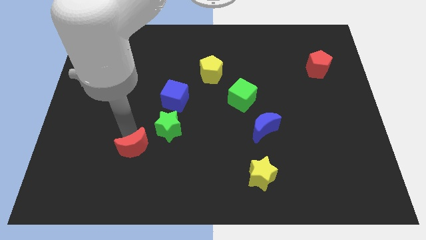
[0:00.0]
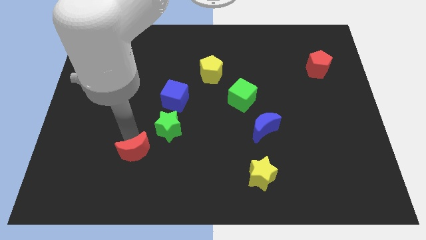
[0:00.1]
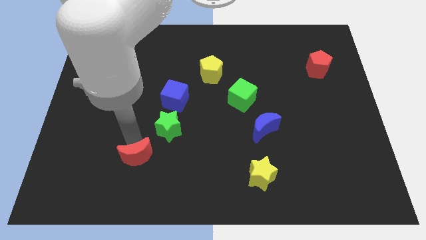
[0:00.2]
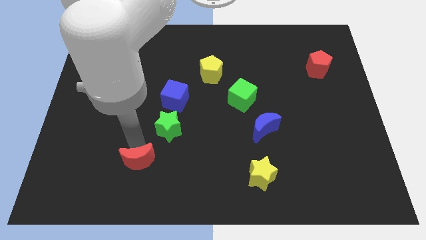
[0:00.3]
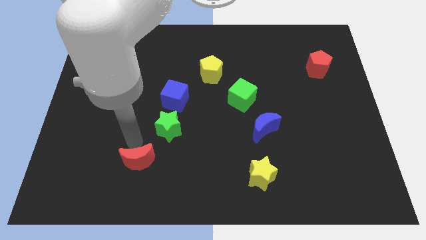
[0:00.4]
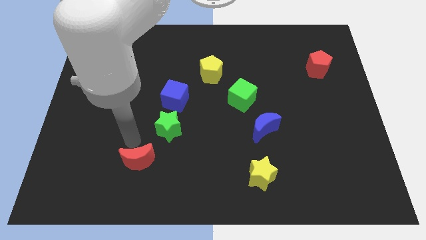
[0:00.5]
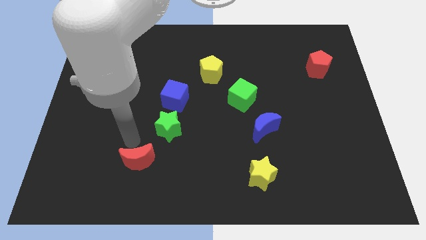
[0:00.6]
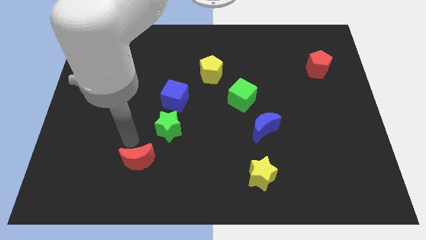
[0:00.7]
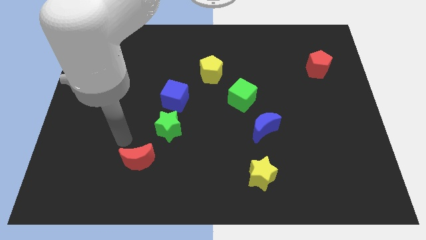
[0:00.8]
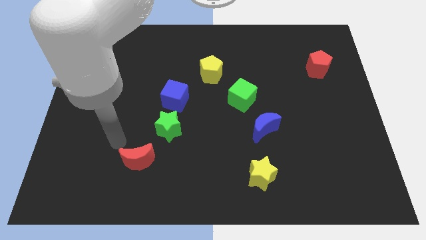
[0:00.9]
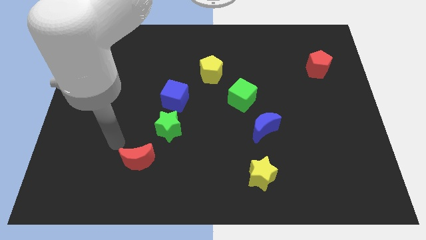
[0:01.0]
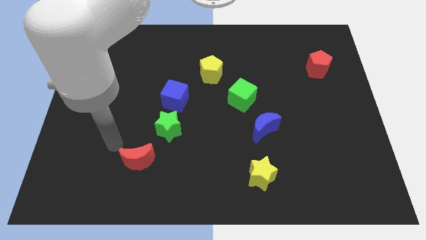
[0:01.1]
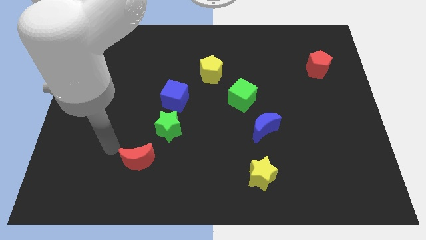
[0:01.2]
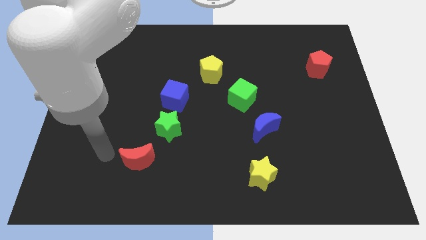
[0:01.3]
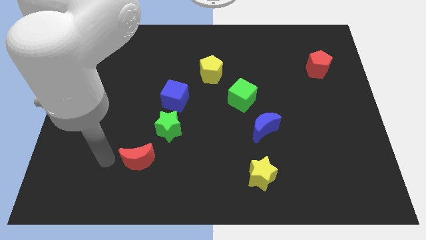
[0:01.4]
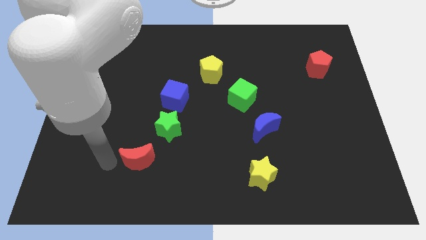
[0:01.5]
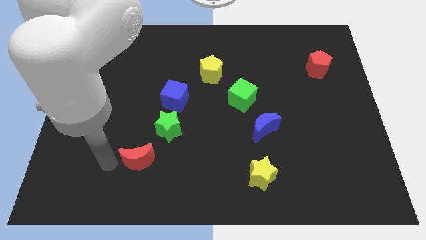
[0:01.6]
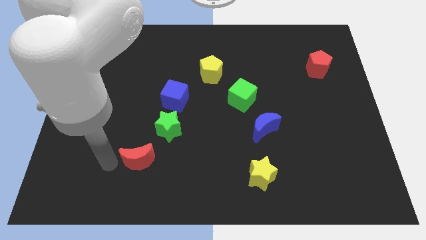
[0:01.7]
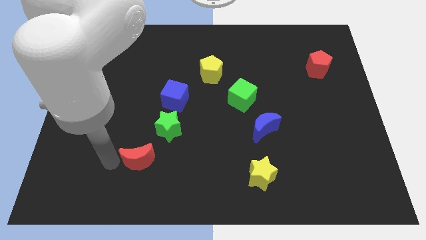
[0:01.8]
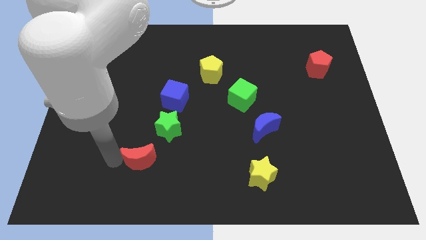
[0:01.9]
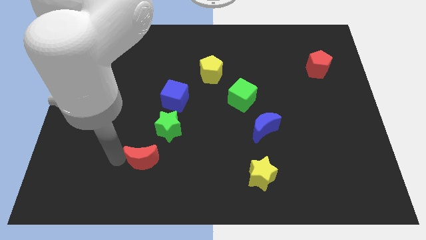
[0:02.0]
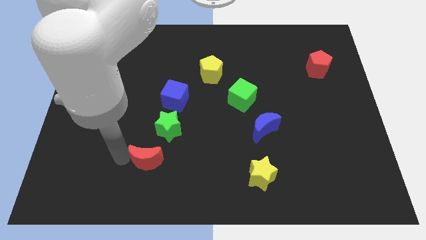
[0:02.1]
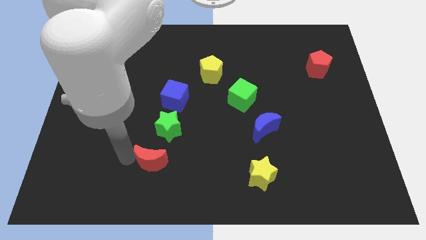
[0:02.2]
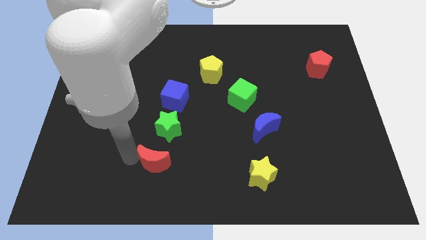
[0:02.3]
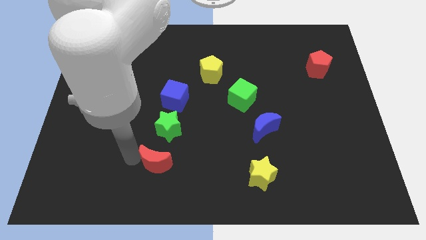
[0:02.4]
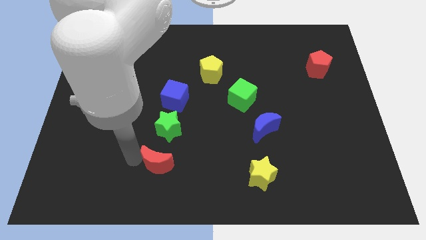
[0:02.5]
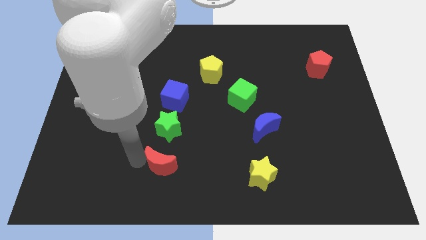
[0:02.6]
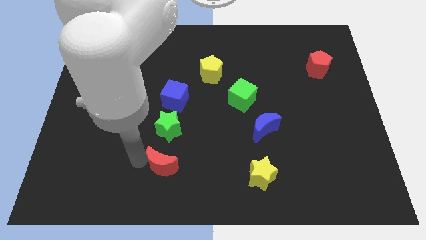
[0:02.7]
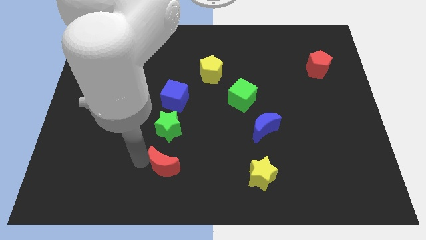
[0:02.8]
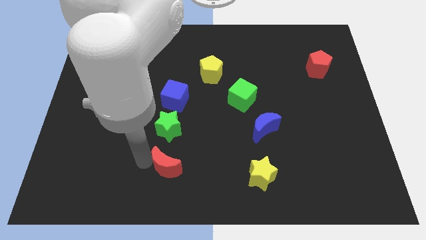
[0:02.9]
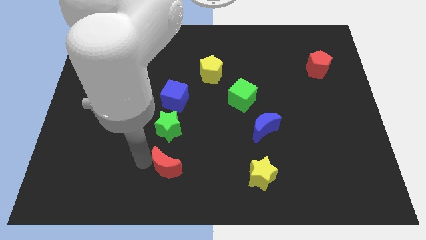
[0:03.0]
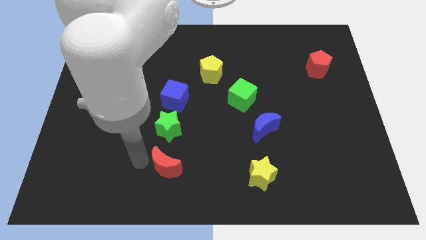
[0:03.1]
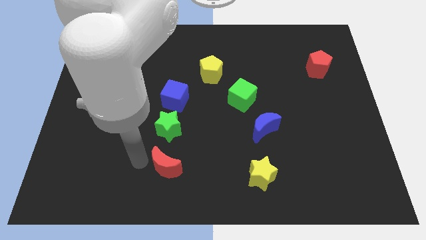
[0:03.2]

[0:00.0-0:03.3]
place the red moon at the bottom of green star

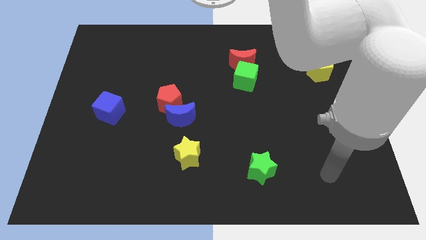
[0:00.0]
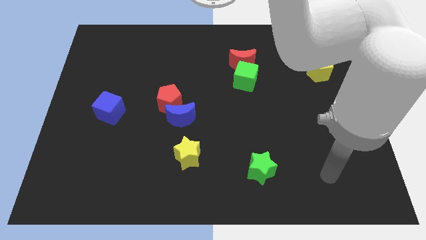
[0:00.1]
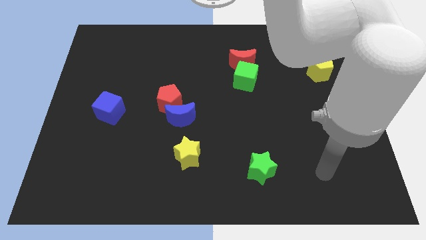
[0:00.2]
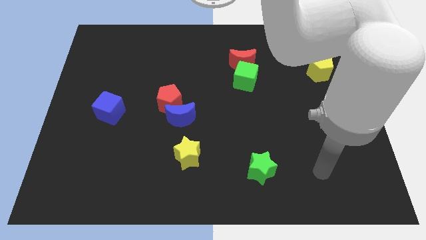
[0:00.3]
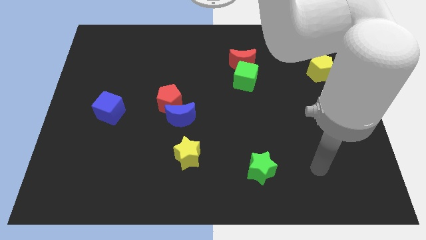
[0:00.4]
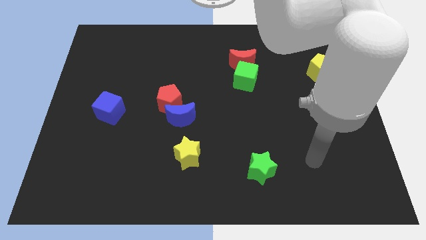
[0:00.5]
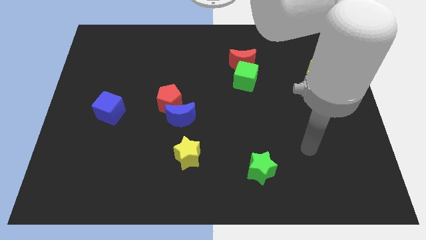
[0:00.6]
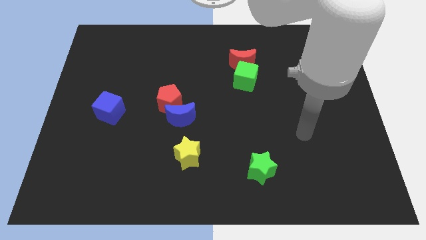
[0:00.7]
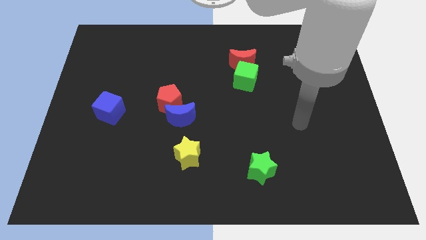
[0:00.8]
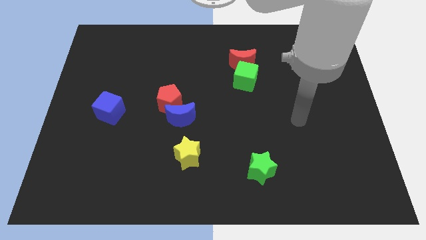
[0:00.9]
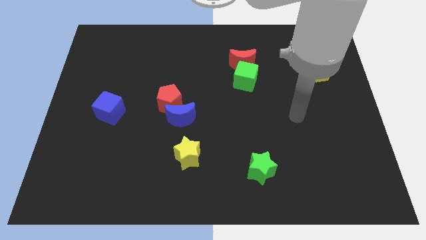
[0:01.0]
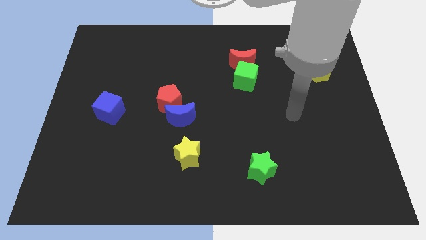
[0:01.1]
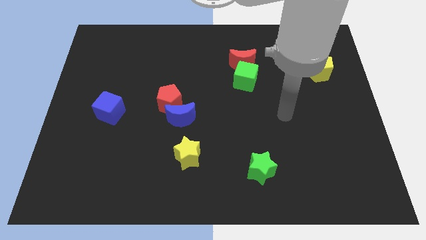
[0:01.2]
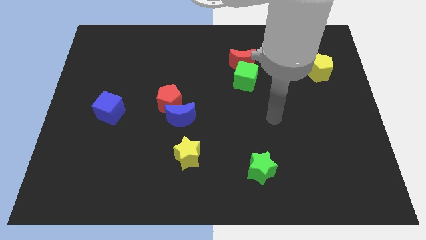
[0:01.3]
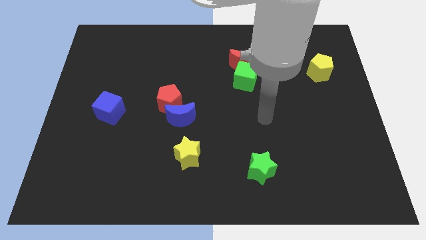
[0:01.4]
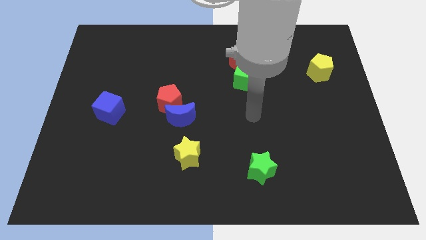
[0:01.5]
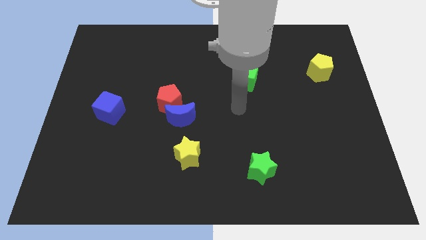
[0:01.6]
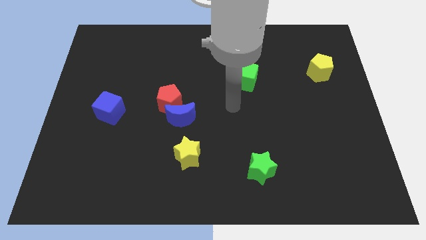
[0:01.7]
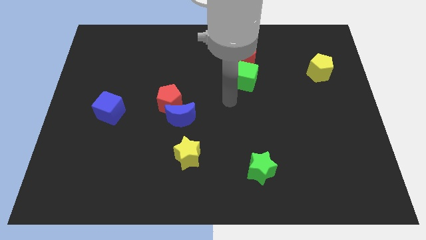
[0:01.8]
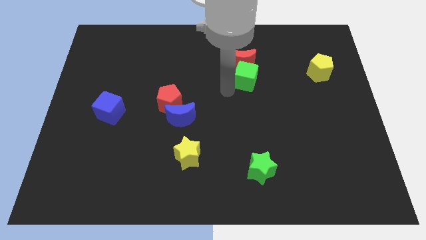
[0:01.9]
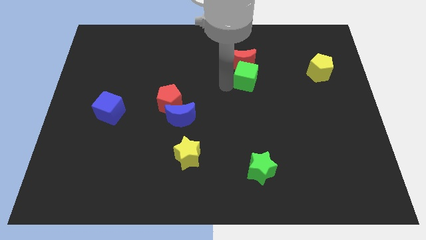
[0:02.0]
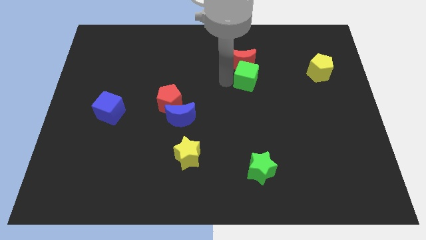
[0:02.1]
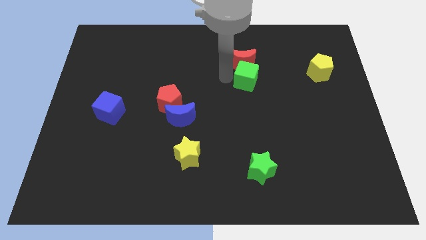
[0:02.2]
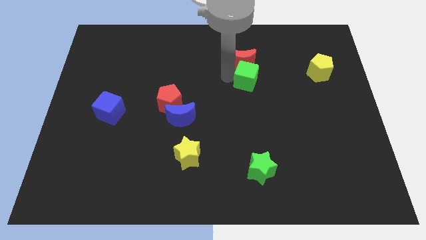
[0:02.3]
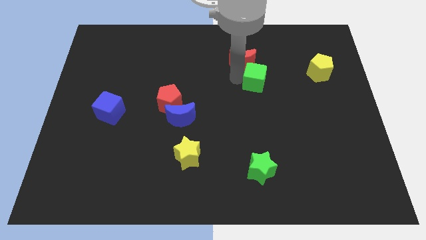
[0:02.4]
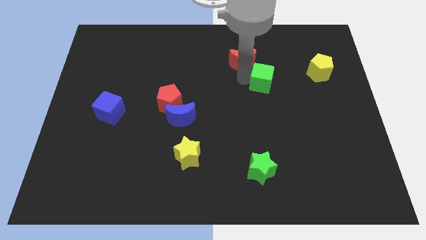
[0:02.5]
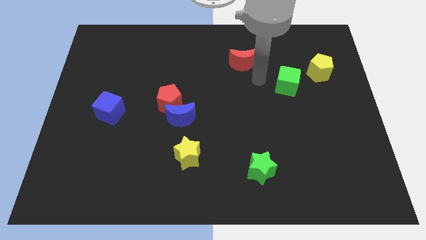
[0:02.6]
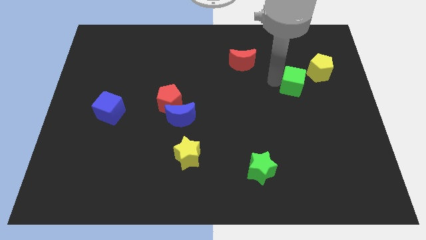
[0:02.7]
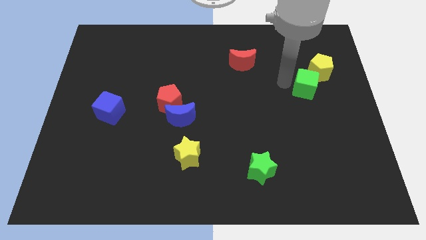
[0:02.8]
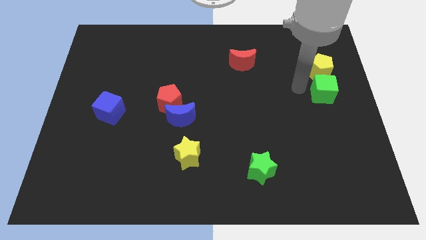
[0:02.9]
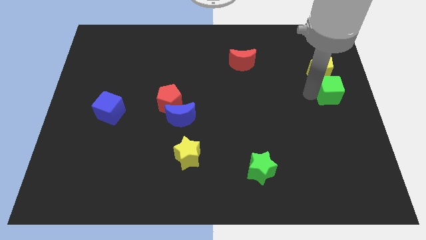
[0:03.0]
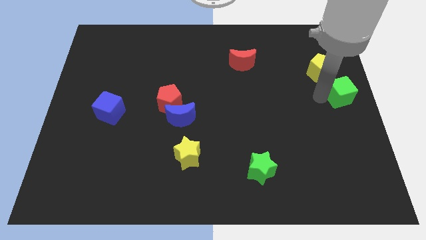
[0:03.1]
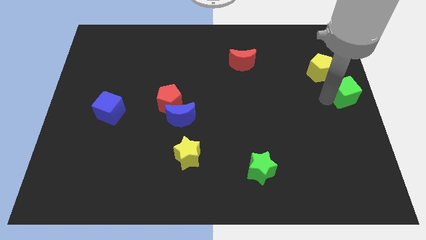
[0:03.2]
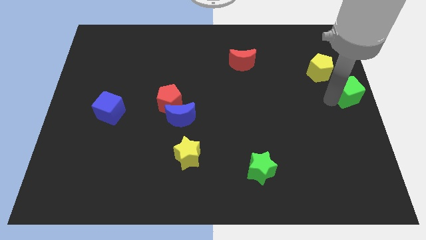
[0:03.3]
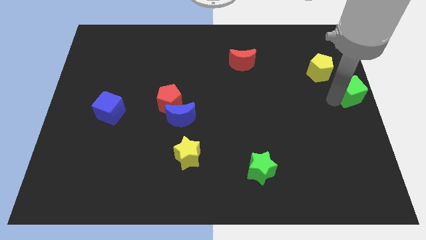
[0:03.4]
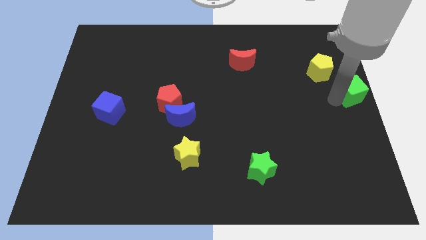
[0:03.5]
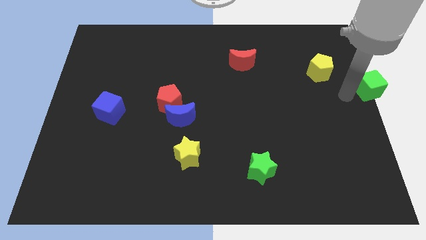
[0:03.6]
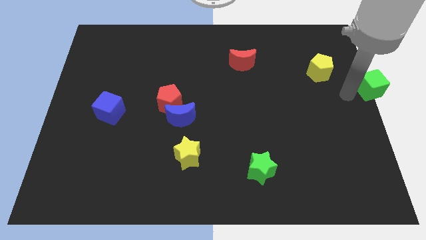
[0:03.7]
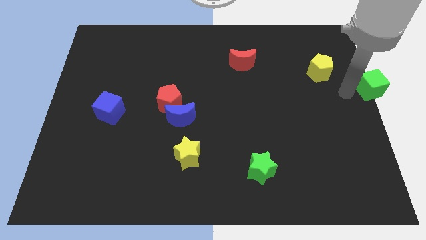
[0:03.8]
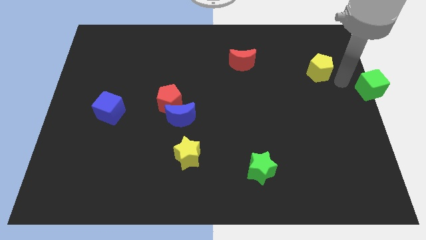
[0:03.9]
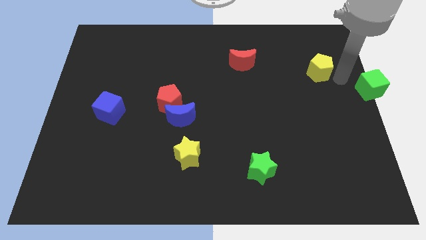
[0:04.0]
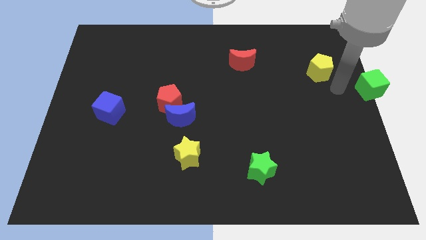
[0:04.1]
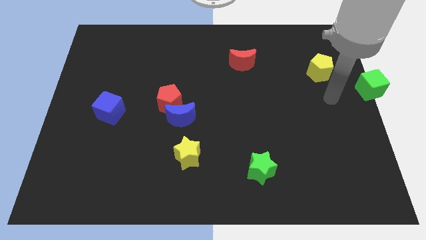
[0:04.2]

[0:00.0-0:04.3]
push the green cube to the center right side of the board

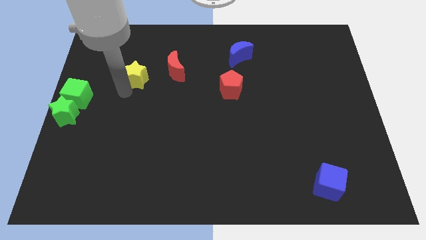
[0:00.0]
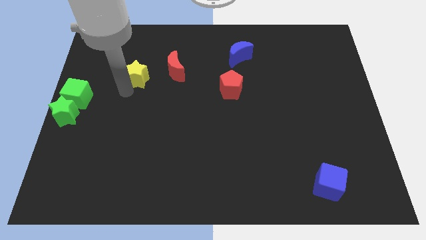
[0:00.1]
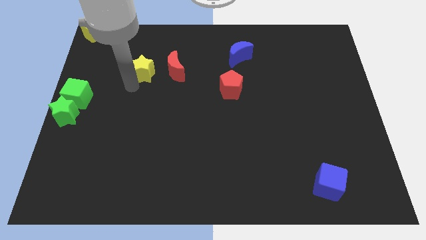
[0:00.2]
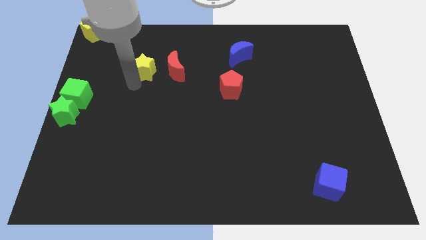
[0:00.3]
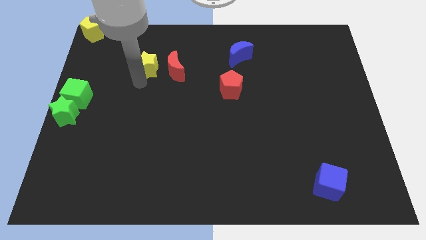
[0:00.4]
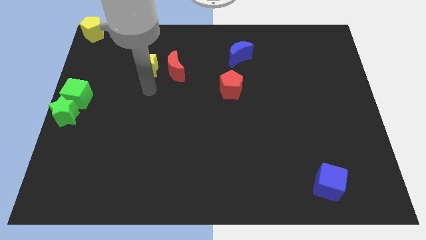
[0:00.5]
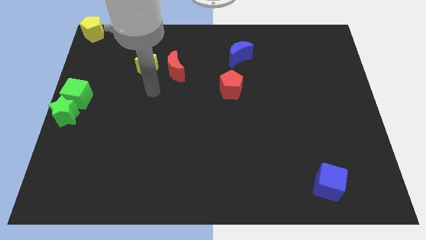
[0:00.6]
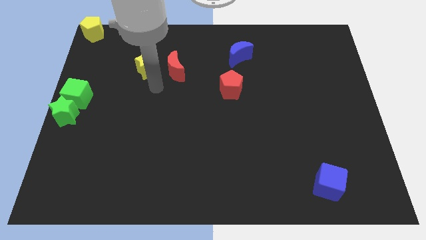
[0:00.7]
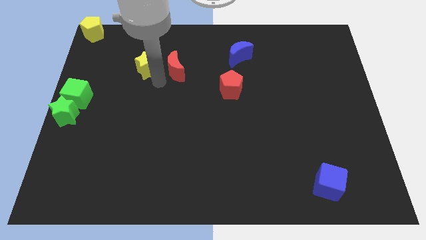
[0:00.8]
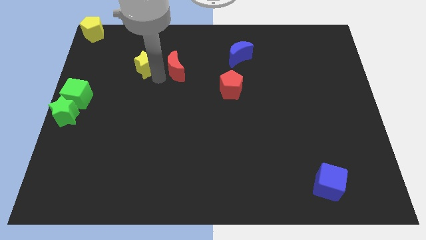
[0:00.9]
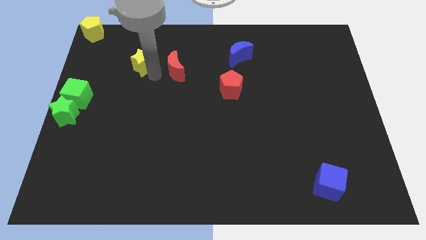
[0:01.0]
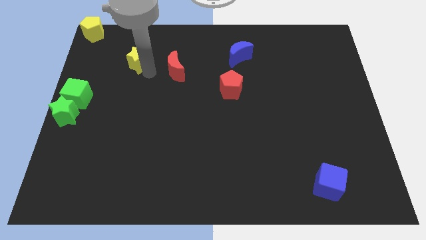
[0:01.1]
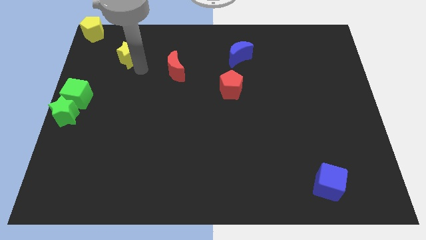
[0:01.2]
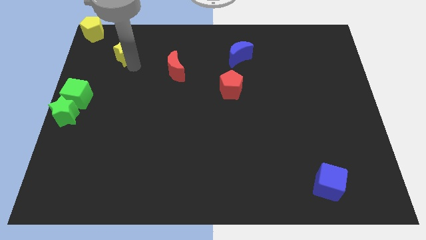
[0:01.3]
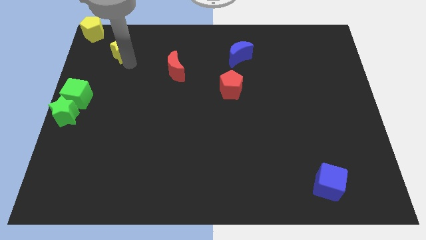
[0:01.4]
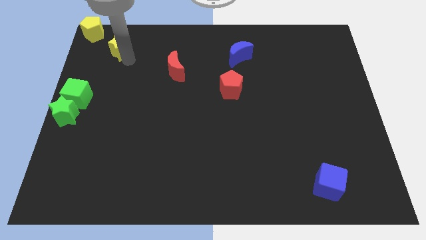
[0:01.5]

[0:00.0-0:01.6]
place the yellow star in between the red moon and yellow pentagon
